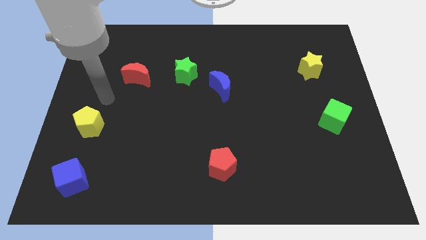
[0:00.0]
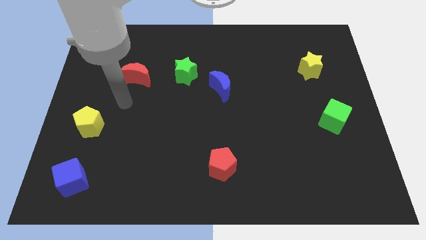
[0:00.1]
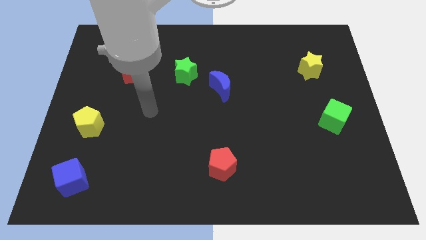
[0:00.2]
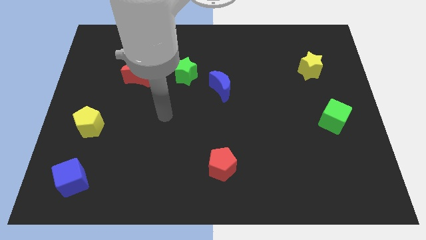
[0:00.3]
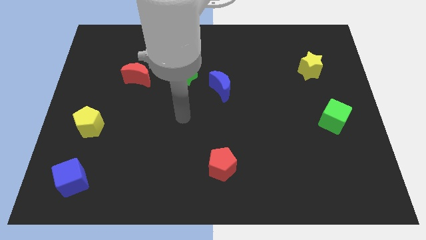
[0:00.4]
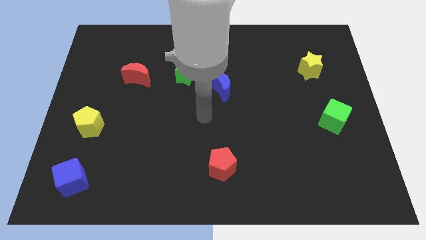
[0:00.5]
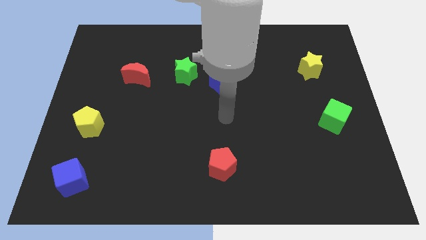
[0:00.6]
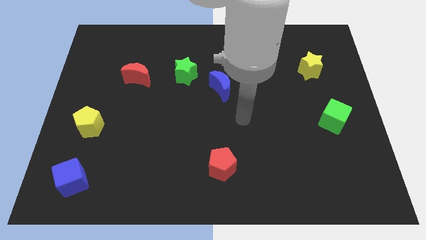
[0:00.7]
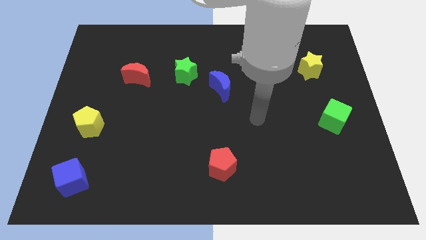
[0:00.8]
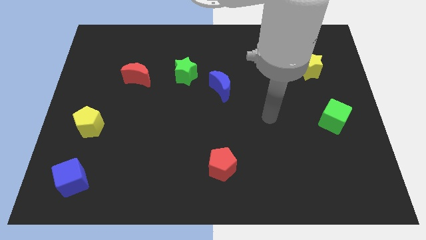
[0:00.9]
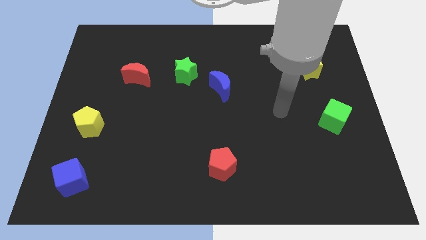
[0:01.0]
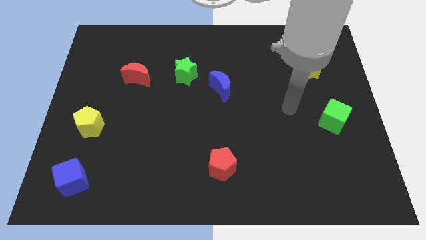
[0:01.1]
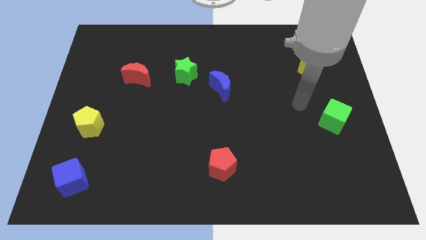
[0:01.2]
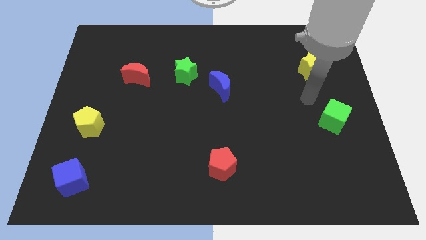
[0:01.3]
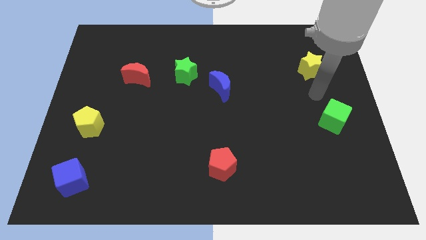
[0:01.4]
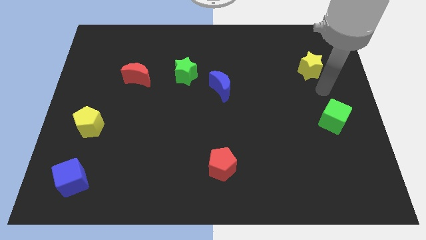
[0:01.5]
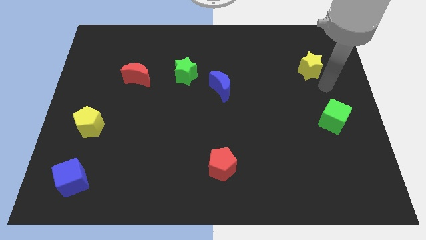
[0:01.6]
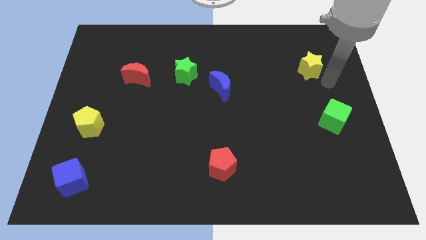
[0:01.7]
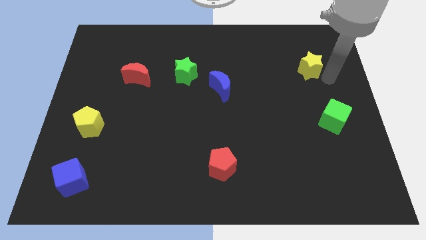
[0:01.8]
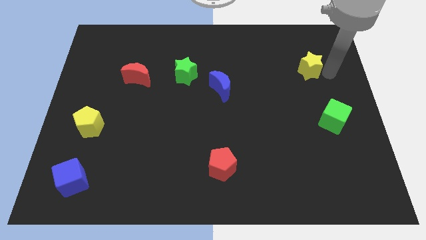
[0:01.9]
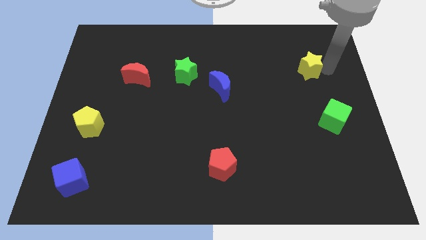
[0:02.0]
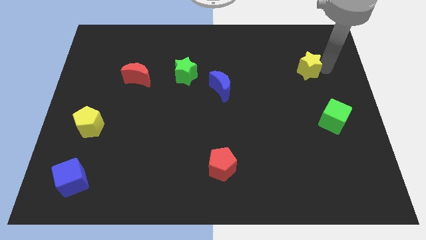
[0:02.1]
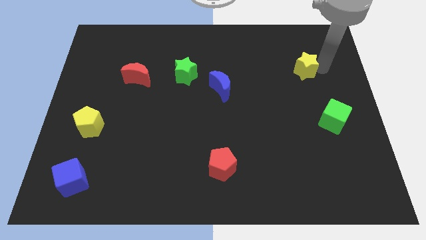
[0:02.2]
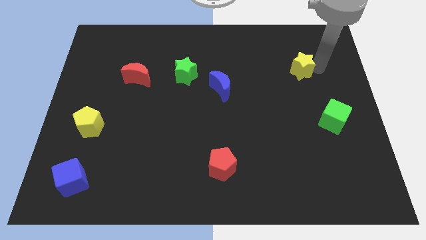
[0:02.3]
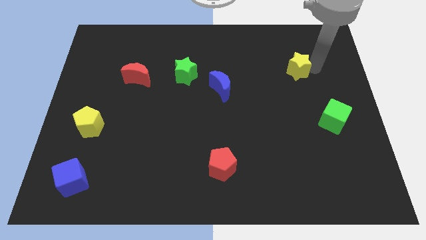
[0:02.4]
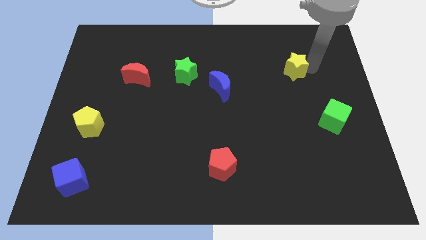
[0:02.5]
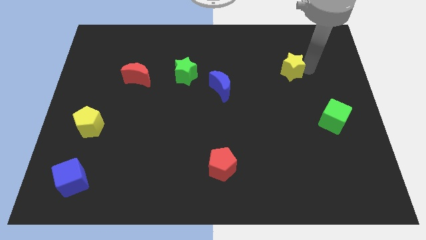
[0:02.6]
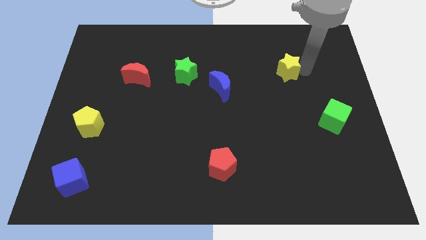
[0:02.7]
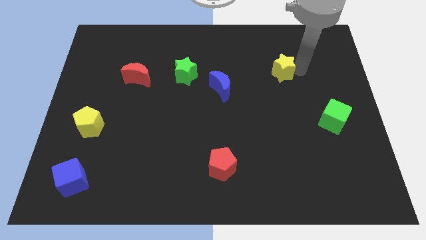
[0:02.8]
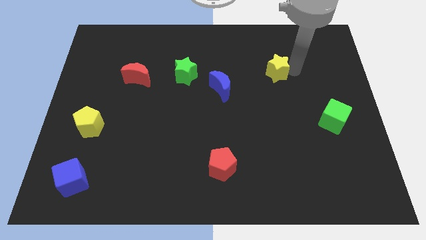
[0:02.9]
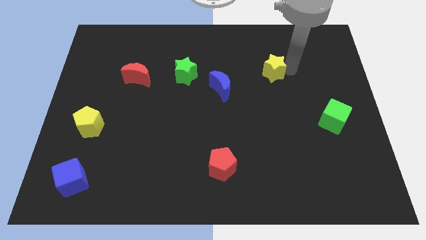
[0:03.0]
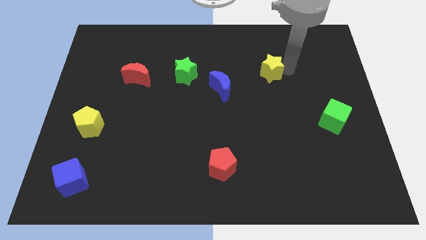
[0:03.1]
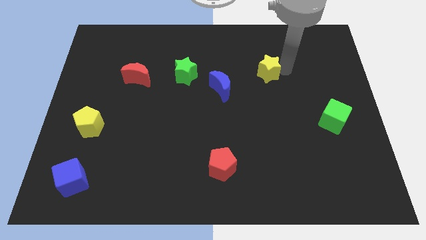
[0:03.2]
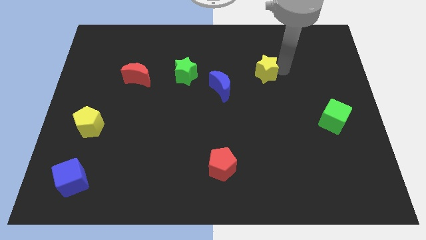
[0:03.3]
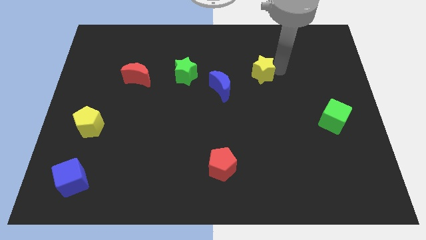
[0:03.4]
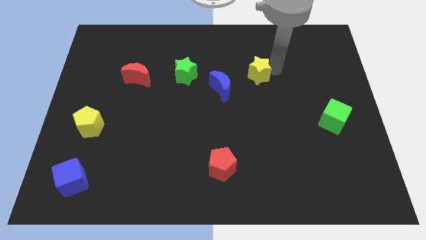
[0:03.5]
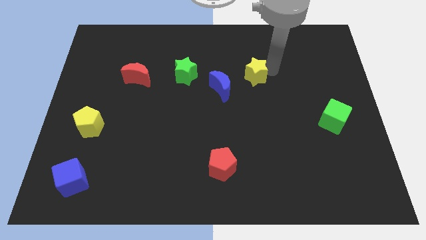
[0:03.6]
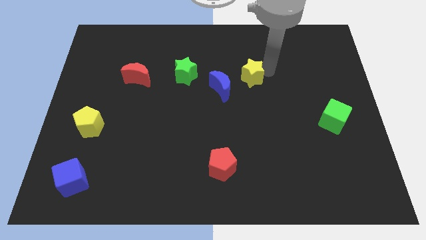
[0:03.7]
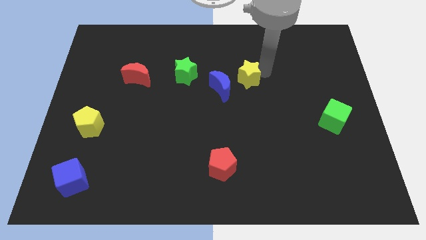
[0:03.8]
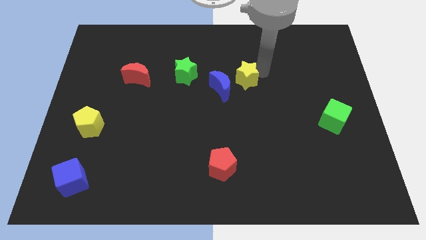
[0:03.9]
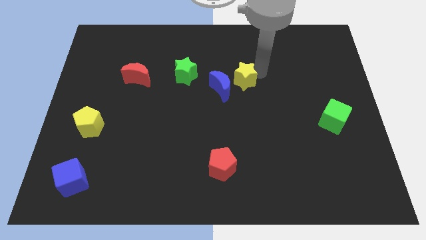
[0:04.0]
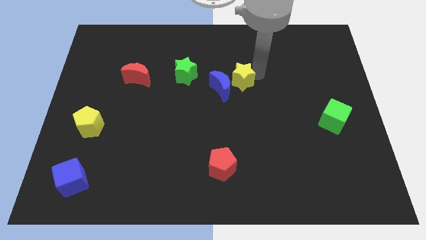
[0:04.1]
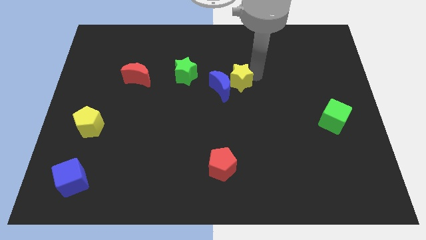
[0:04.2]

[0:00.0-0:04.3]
move the yellow star close to the blue moon

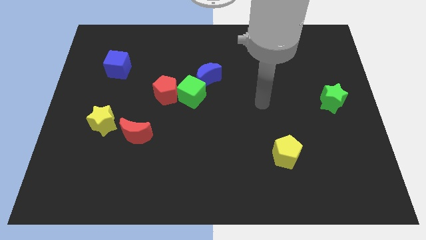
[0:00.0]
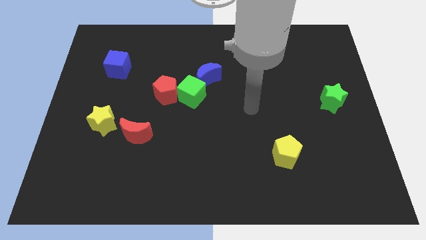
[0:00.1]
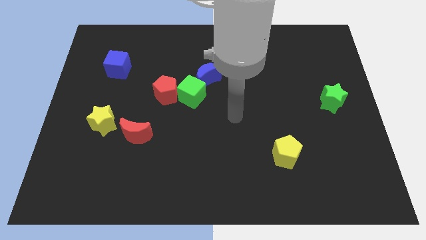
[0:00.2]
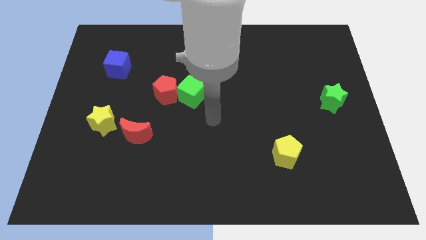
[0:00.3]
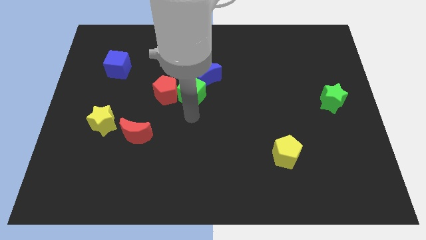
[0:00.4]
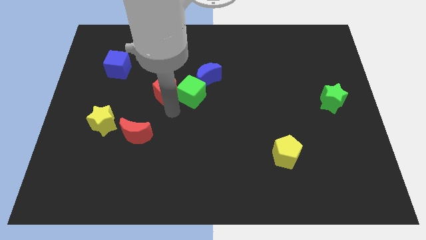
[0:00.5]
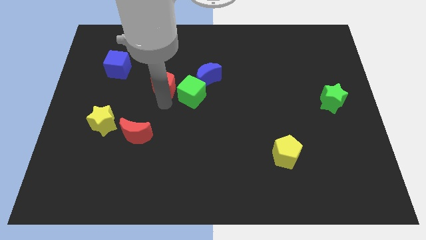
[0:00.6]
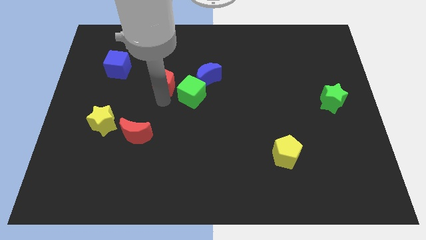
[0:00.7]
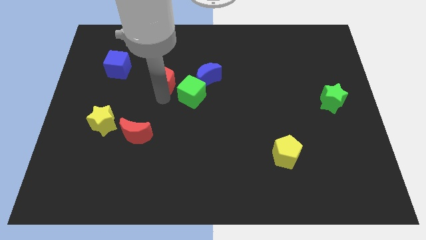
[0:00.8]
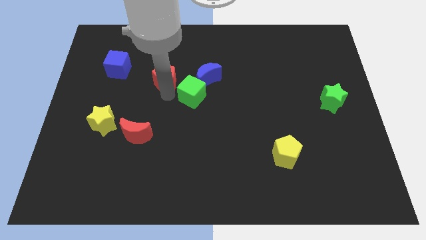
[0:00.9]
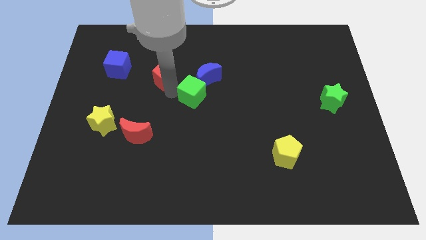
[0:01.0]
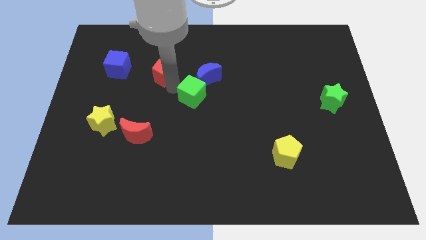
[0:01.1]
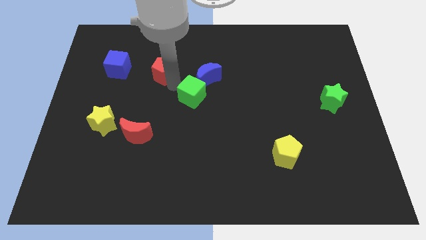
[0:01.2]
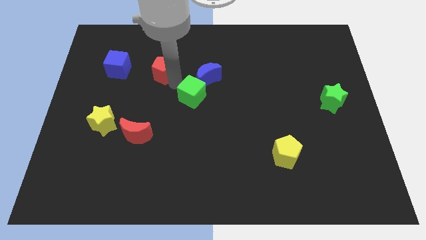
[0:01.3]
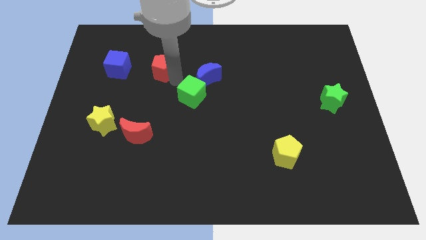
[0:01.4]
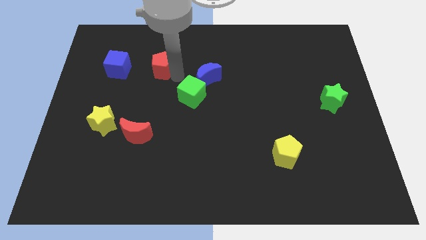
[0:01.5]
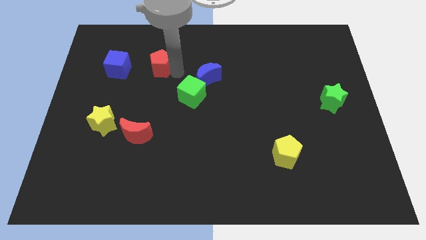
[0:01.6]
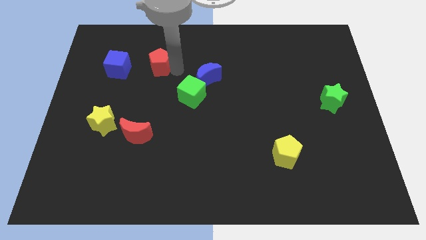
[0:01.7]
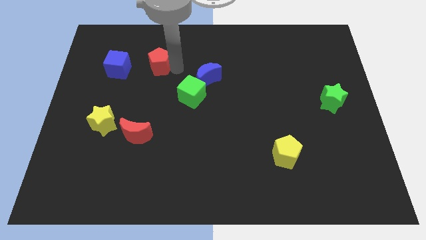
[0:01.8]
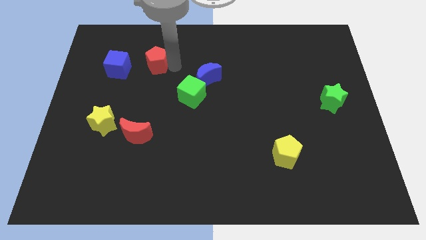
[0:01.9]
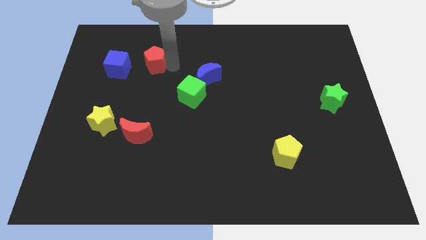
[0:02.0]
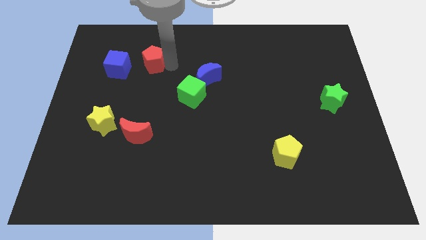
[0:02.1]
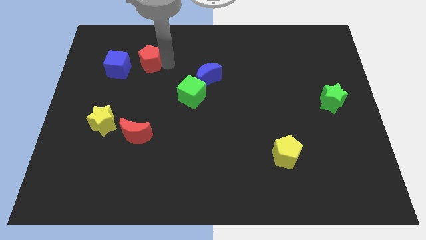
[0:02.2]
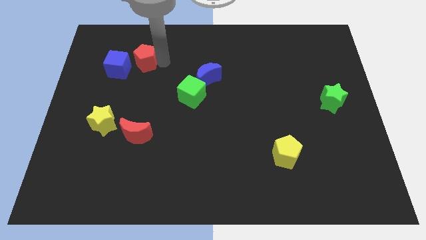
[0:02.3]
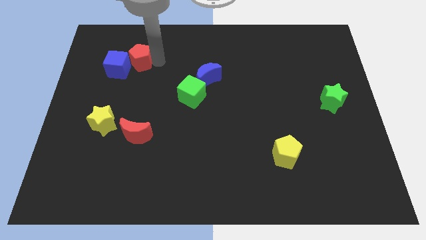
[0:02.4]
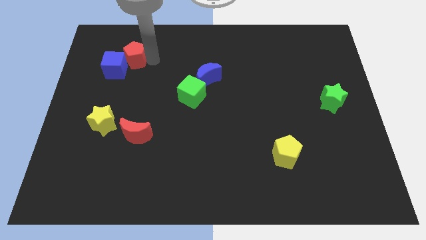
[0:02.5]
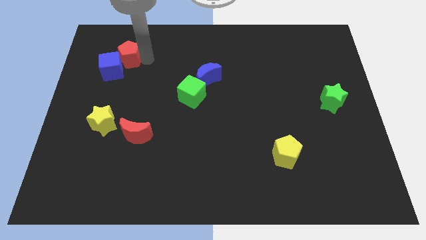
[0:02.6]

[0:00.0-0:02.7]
move the red pentagon towards the blue cube

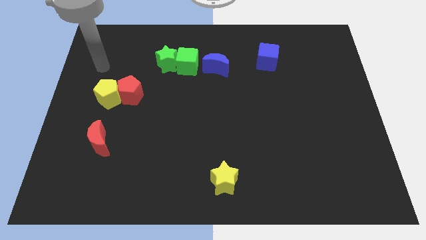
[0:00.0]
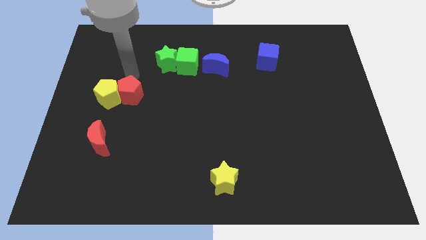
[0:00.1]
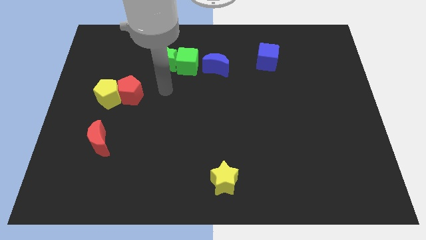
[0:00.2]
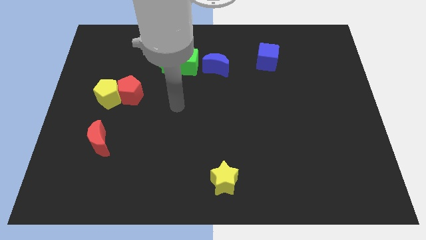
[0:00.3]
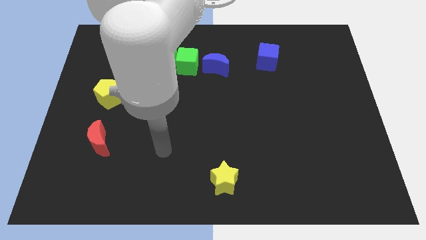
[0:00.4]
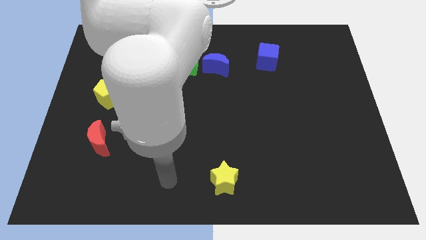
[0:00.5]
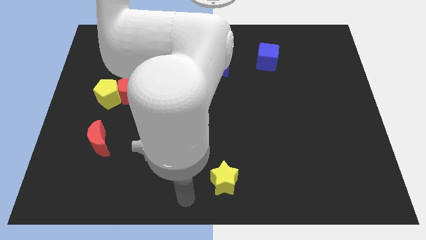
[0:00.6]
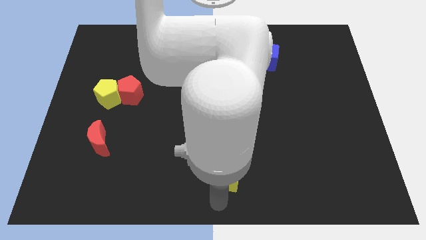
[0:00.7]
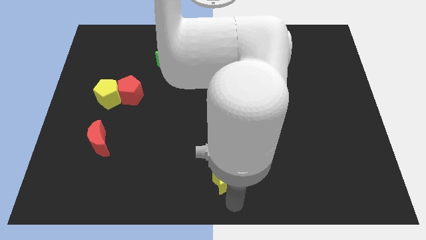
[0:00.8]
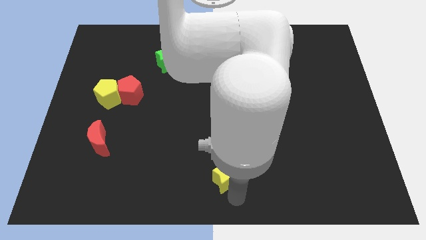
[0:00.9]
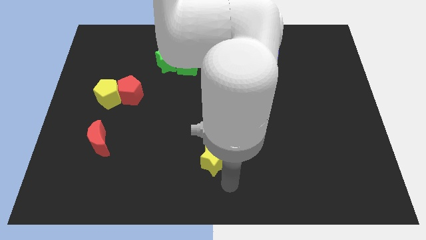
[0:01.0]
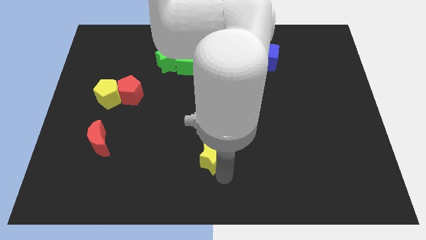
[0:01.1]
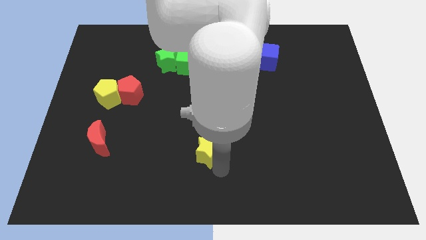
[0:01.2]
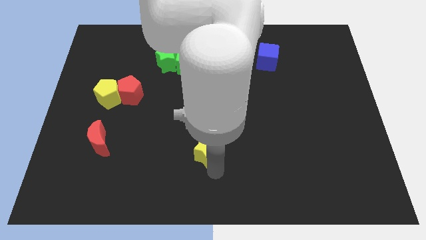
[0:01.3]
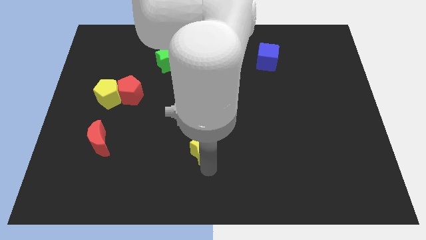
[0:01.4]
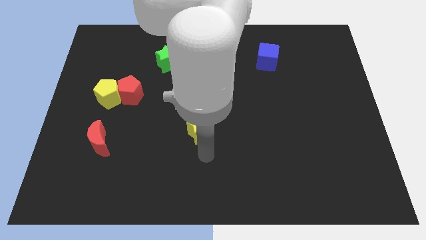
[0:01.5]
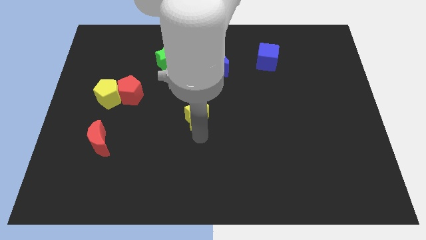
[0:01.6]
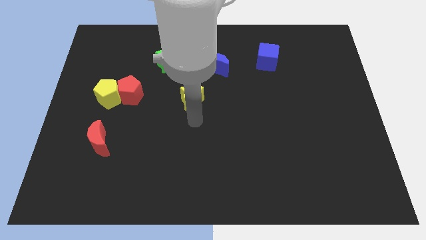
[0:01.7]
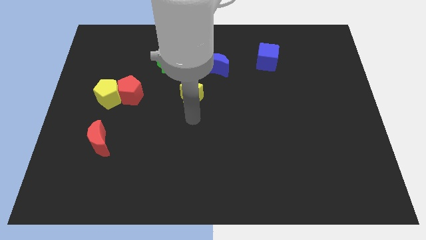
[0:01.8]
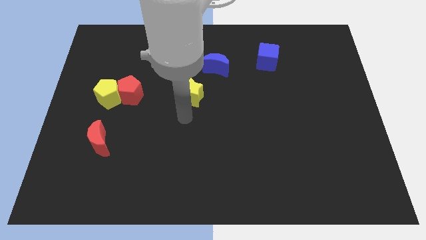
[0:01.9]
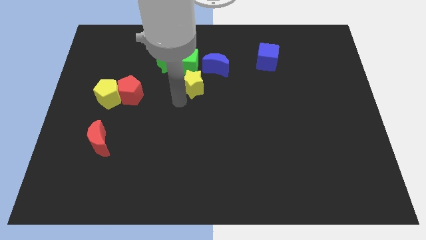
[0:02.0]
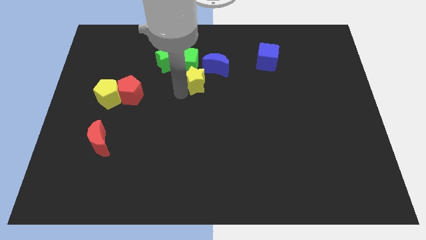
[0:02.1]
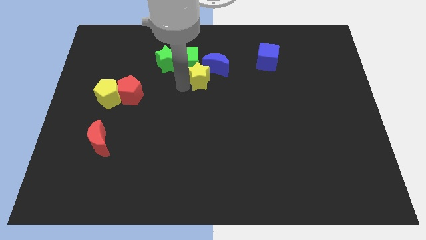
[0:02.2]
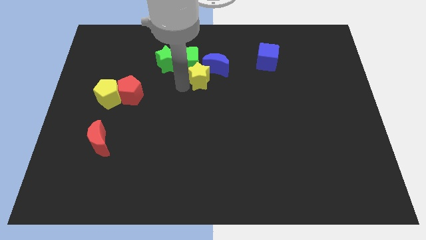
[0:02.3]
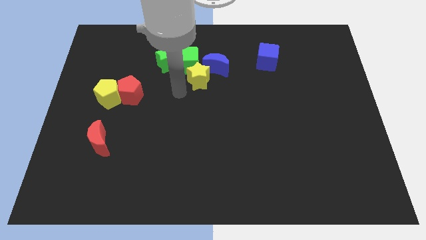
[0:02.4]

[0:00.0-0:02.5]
slide the yellow star to the green cube
